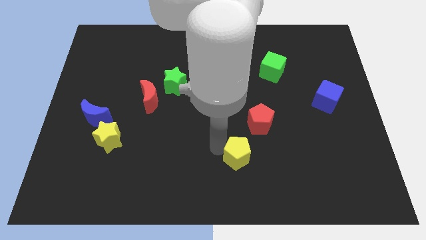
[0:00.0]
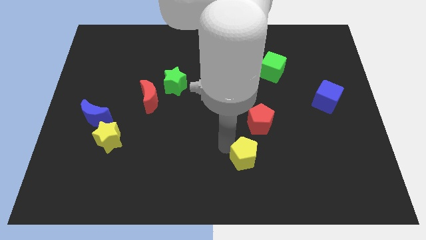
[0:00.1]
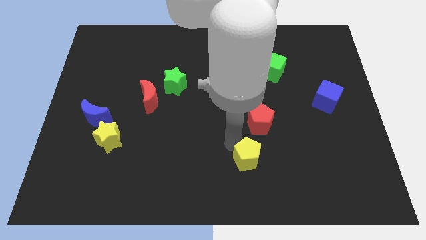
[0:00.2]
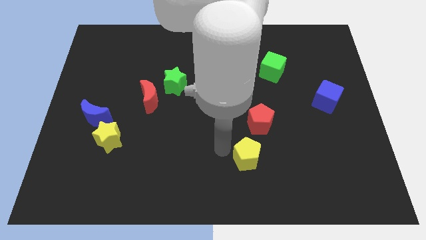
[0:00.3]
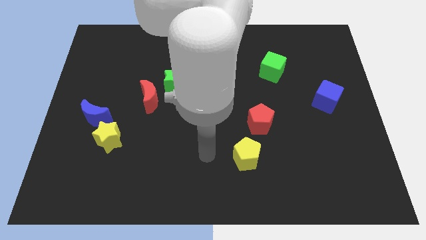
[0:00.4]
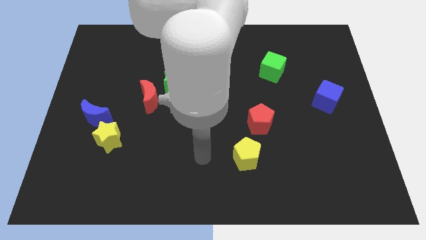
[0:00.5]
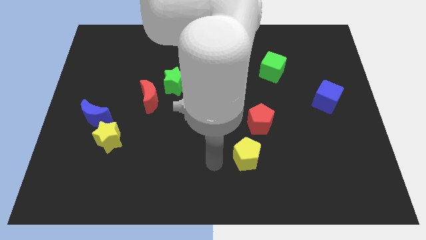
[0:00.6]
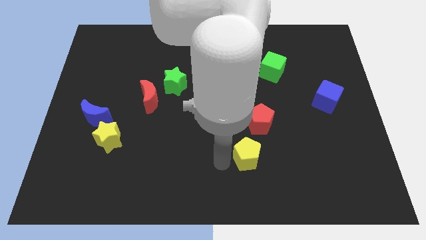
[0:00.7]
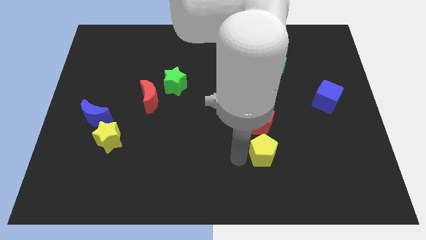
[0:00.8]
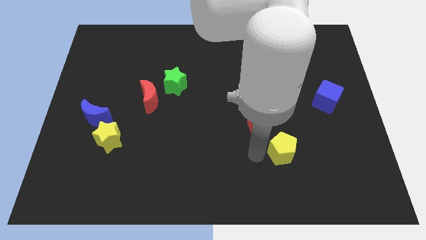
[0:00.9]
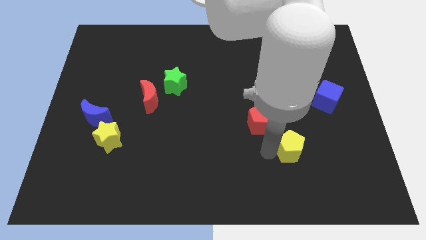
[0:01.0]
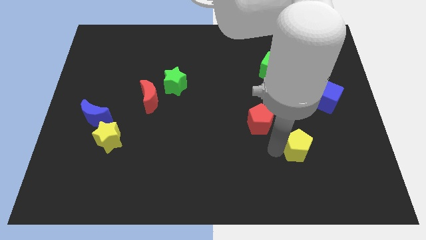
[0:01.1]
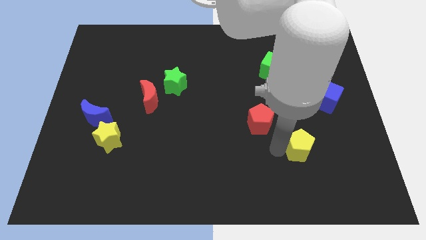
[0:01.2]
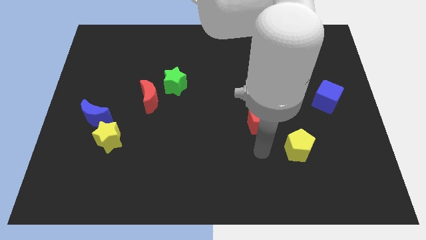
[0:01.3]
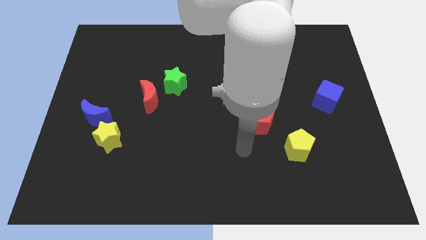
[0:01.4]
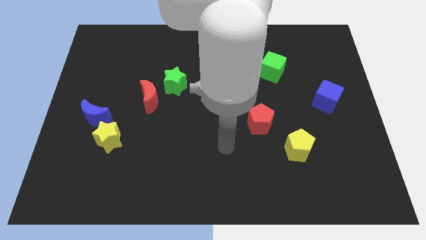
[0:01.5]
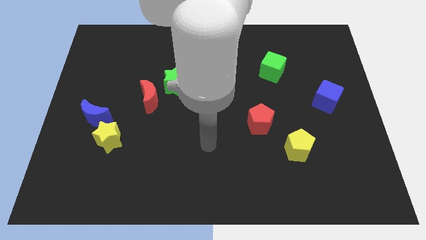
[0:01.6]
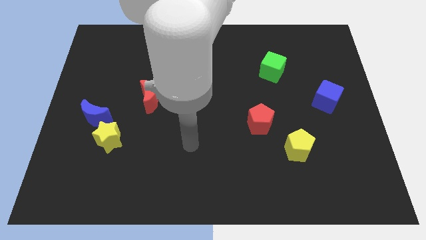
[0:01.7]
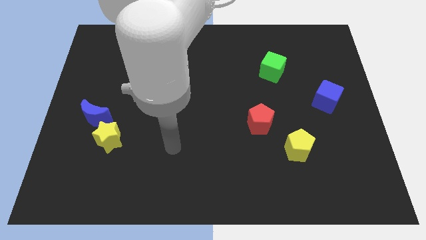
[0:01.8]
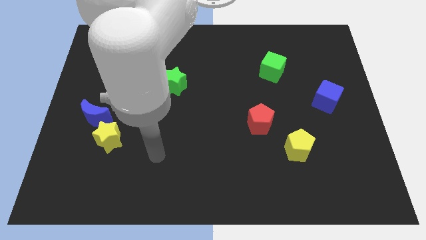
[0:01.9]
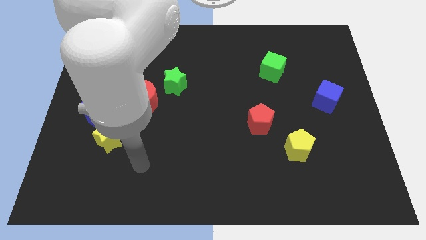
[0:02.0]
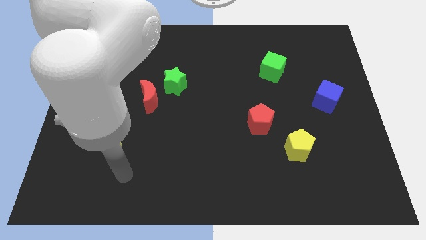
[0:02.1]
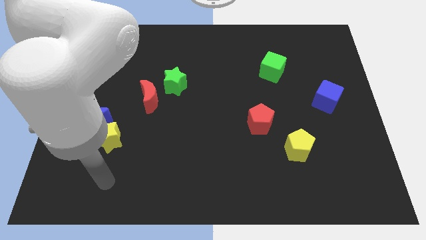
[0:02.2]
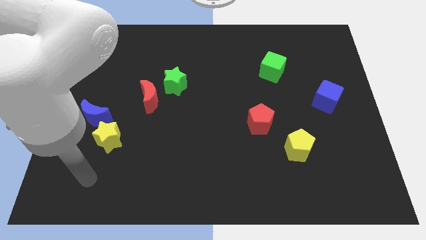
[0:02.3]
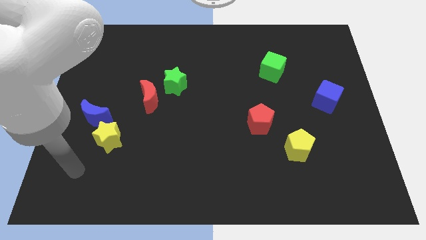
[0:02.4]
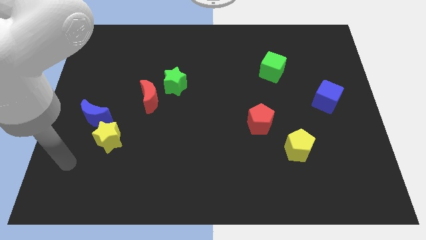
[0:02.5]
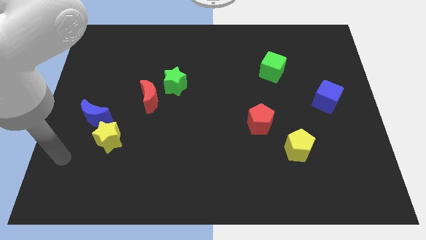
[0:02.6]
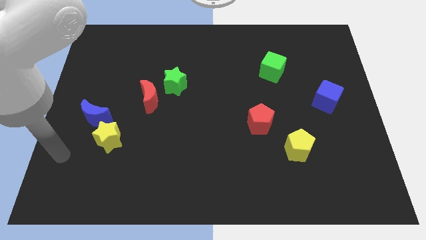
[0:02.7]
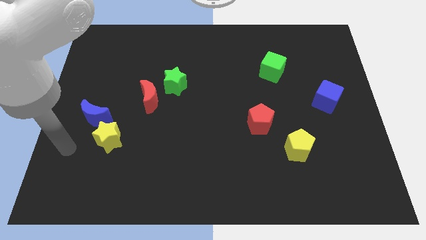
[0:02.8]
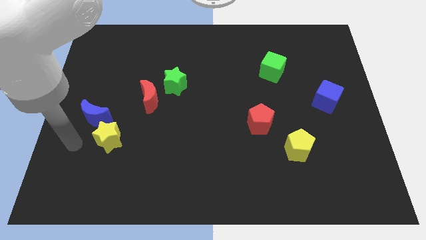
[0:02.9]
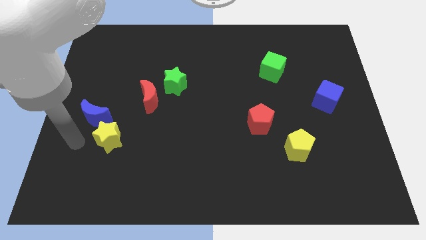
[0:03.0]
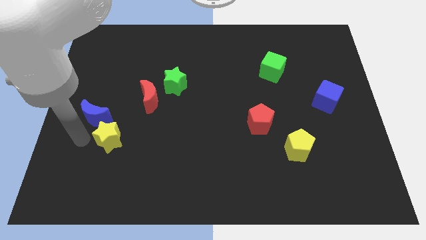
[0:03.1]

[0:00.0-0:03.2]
place the yellow pentagon diagonally to the red pentagon

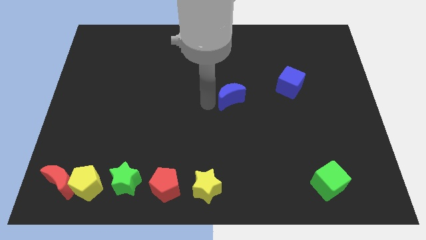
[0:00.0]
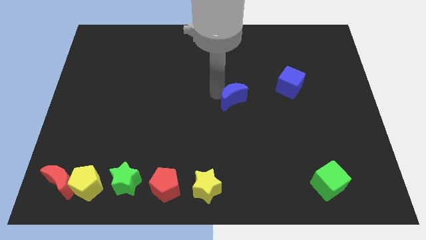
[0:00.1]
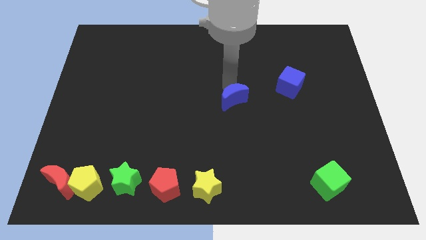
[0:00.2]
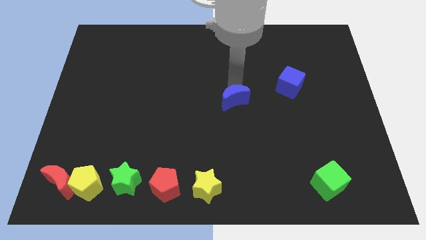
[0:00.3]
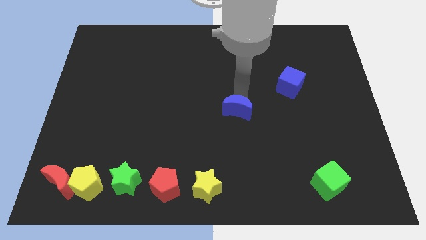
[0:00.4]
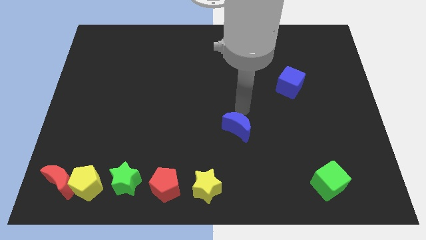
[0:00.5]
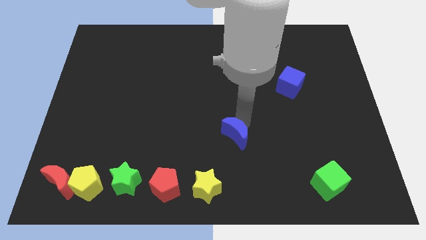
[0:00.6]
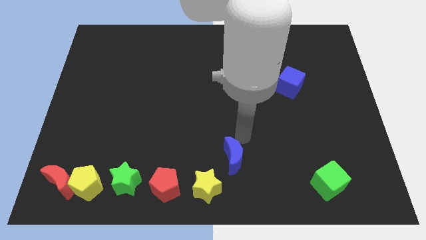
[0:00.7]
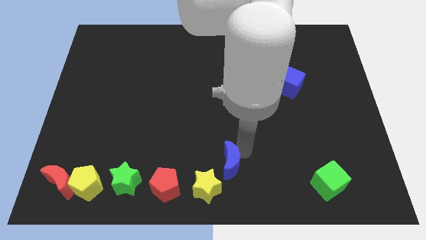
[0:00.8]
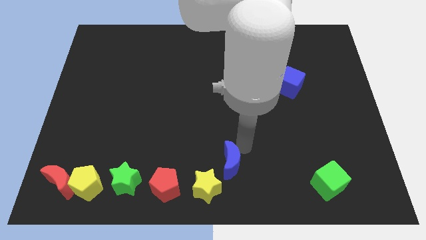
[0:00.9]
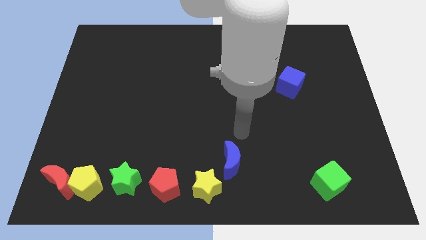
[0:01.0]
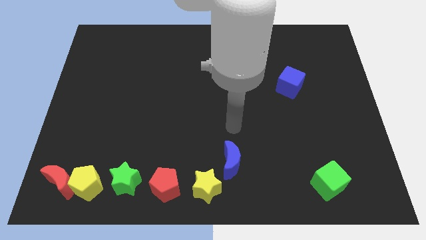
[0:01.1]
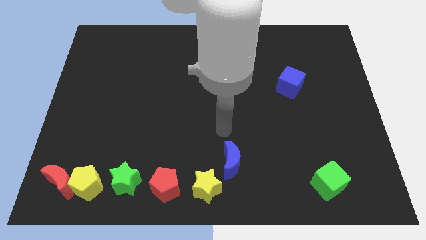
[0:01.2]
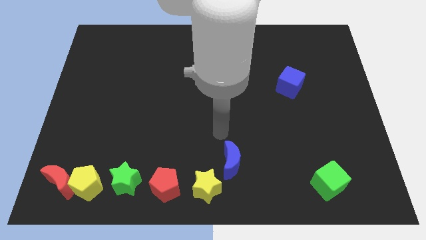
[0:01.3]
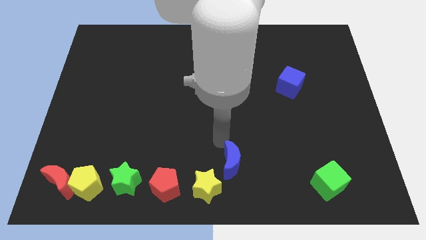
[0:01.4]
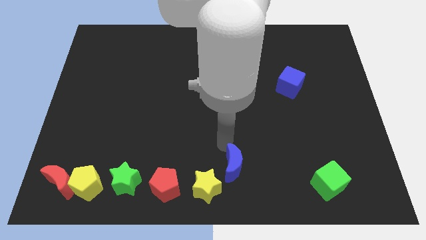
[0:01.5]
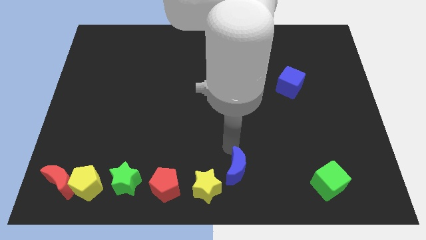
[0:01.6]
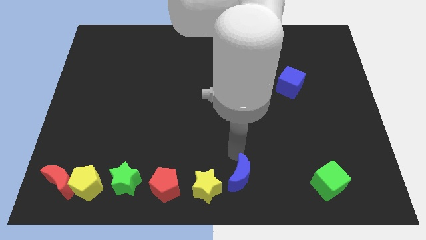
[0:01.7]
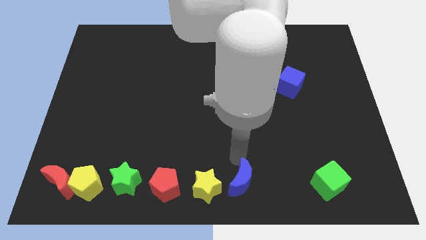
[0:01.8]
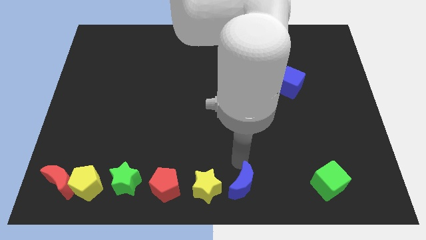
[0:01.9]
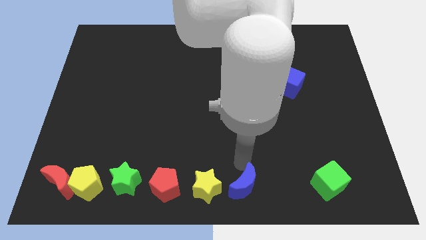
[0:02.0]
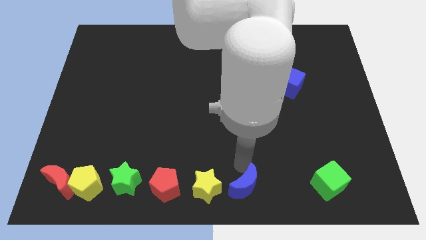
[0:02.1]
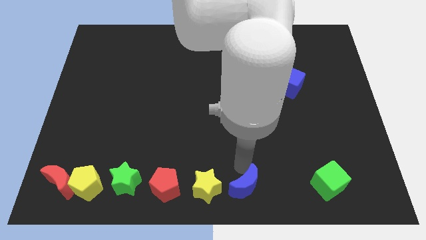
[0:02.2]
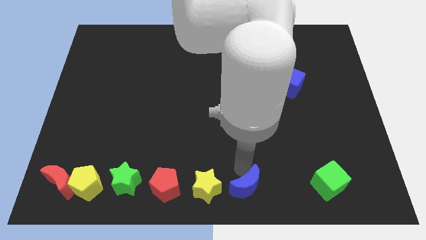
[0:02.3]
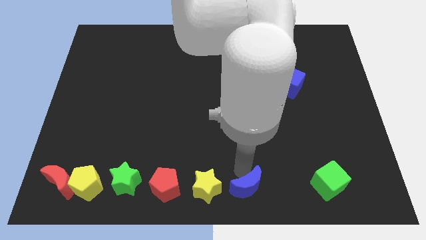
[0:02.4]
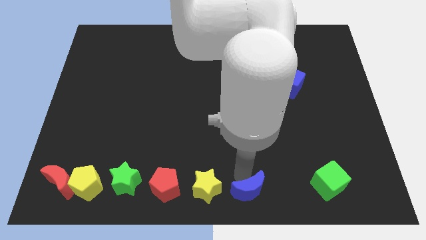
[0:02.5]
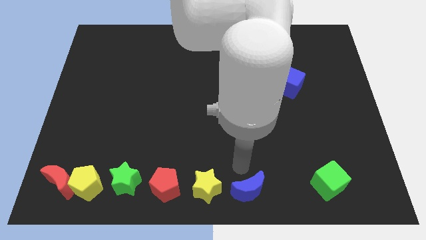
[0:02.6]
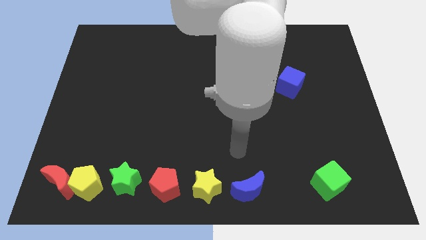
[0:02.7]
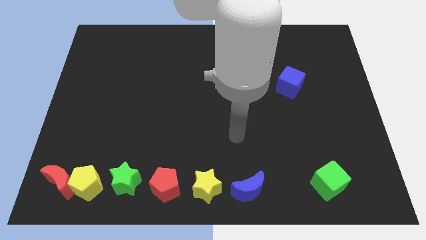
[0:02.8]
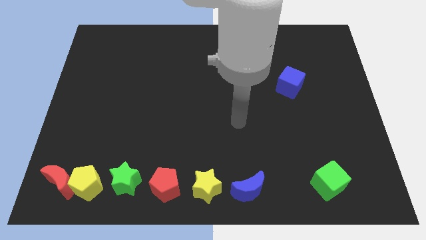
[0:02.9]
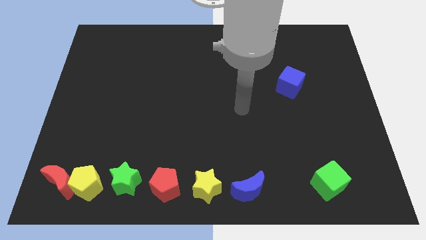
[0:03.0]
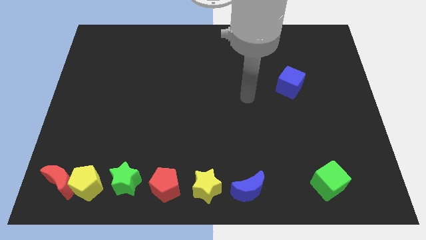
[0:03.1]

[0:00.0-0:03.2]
drag blue moon right to the yellow star

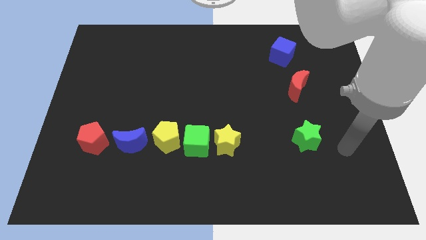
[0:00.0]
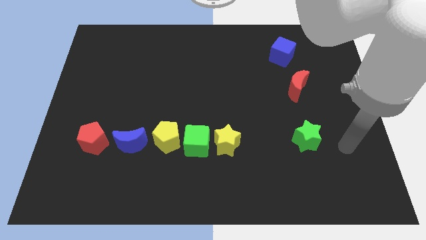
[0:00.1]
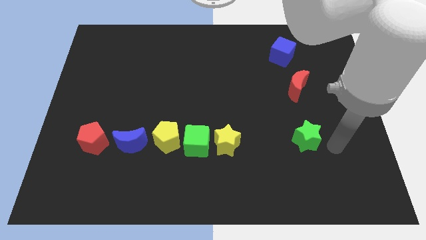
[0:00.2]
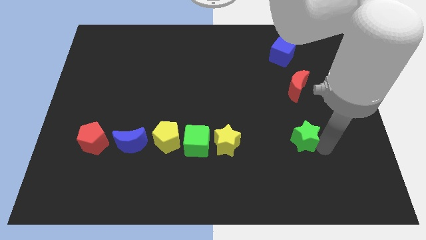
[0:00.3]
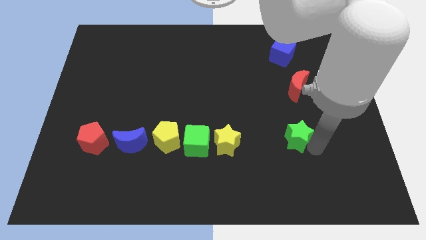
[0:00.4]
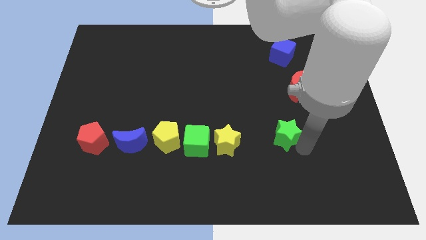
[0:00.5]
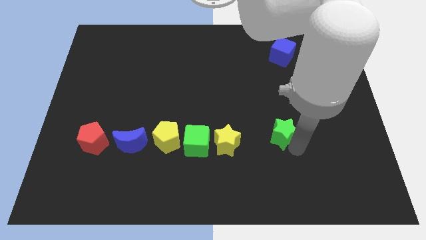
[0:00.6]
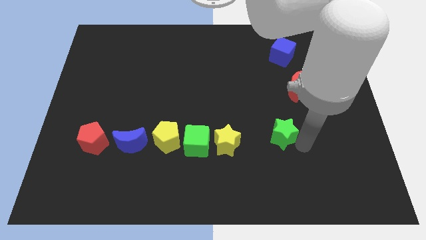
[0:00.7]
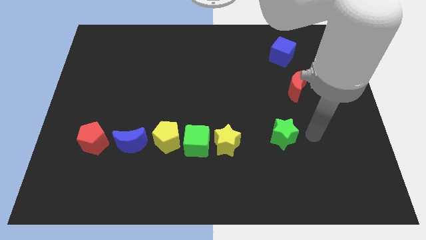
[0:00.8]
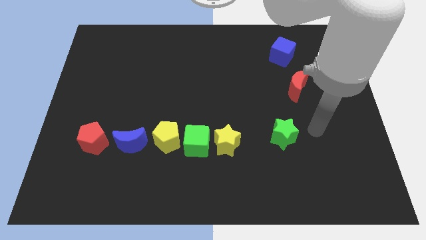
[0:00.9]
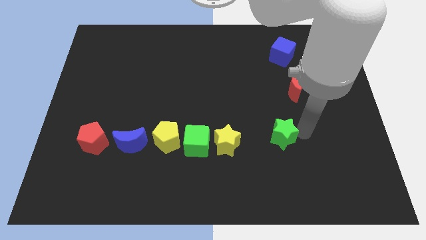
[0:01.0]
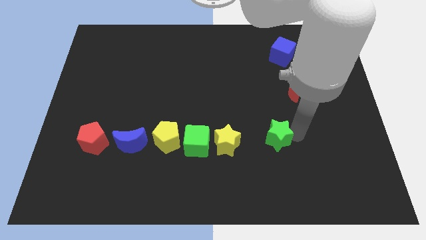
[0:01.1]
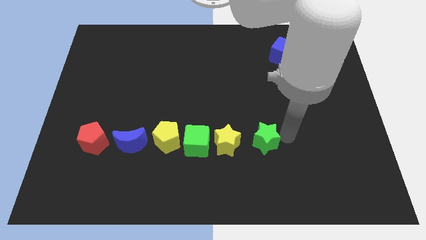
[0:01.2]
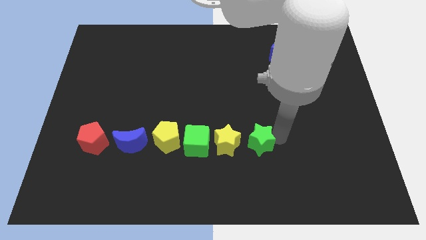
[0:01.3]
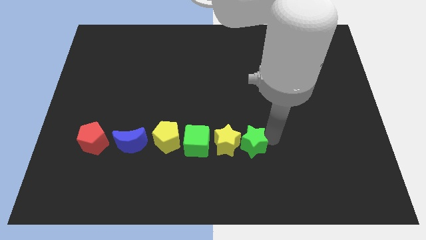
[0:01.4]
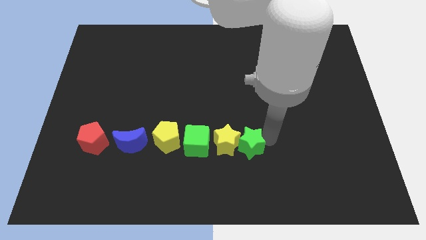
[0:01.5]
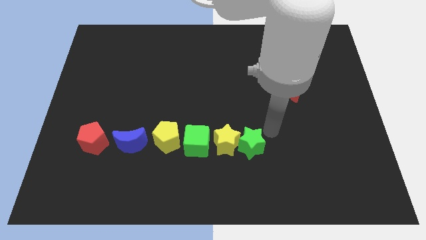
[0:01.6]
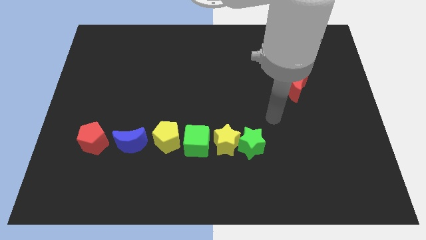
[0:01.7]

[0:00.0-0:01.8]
push the green star into the yellow star

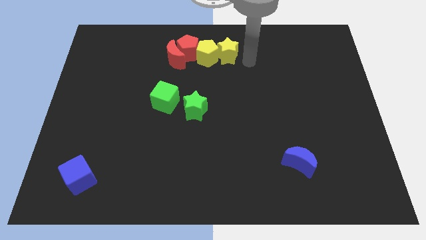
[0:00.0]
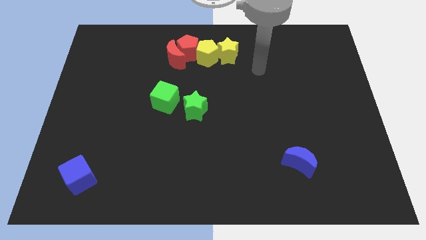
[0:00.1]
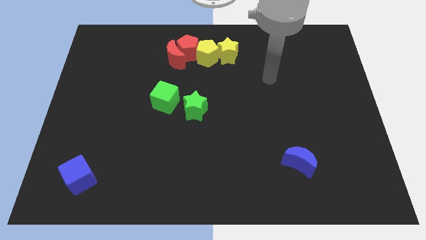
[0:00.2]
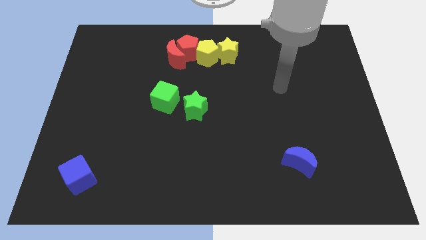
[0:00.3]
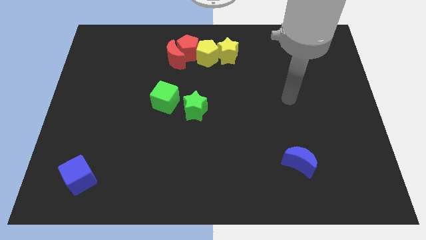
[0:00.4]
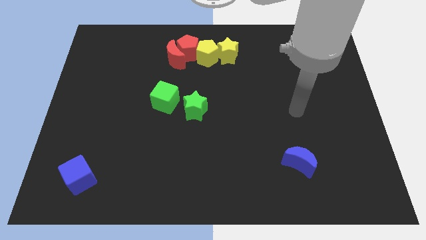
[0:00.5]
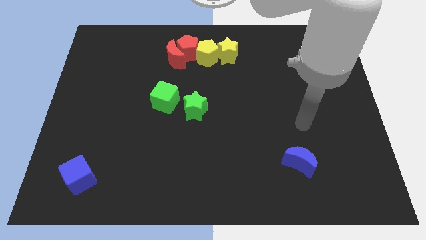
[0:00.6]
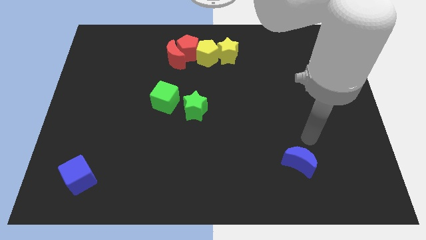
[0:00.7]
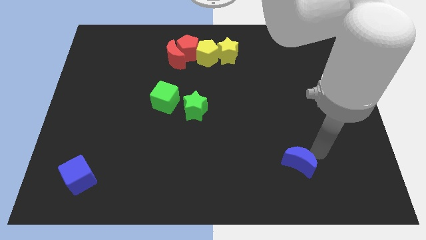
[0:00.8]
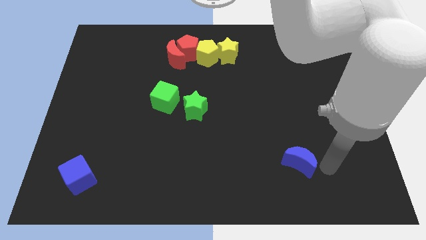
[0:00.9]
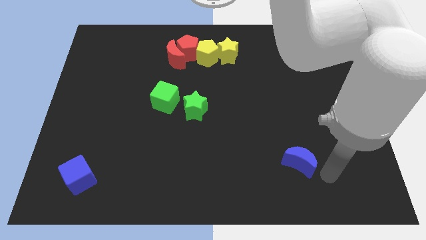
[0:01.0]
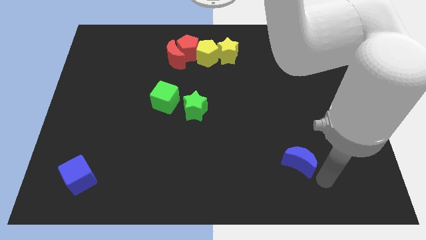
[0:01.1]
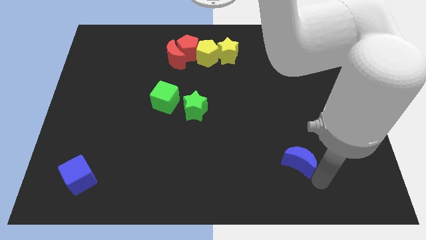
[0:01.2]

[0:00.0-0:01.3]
move arm to the bottom of blue crescent
